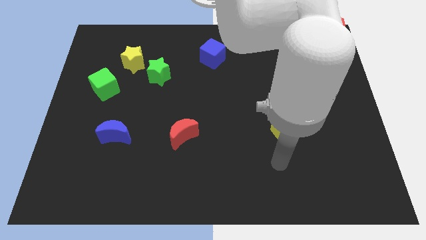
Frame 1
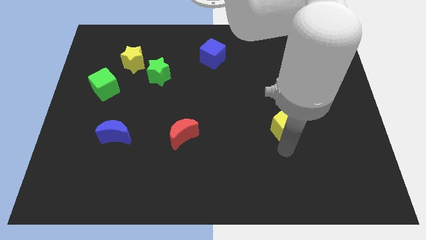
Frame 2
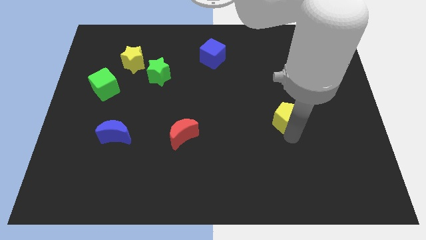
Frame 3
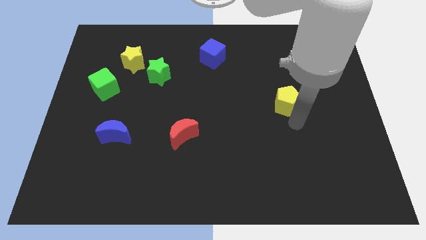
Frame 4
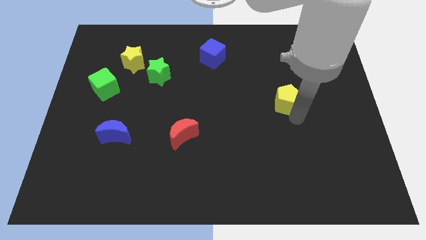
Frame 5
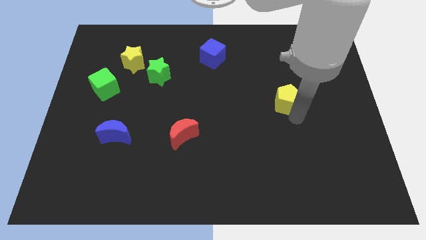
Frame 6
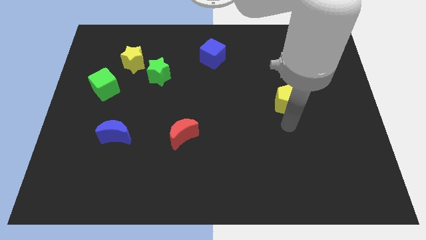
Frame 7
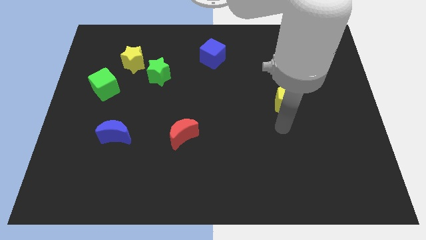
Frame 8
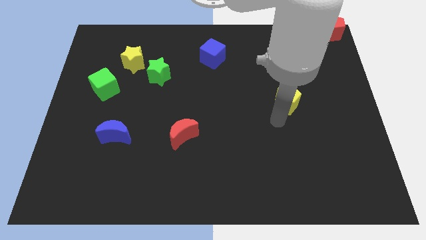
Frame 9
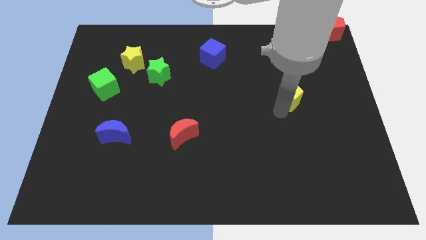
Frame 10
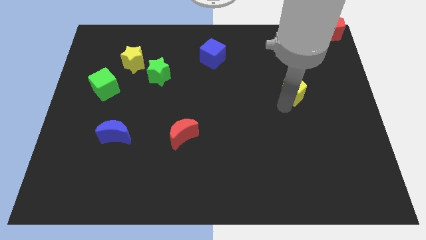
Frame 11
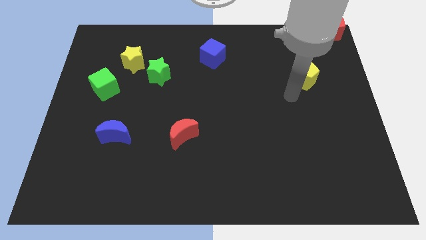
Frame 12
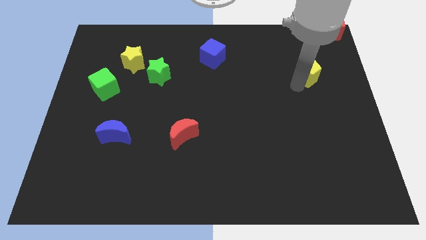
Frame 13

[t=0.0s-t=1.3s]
push the yellow pentagon to the top of the board

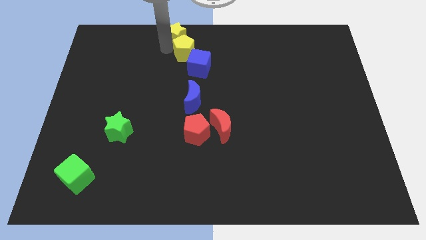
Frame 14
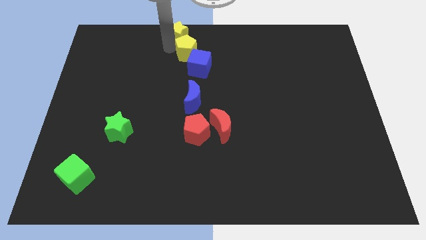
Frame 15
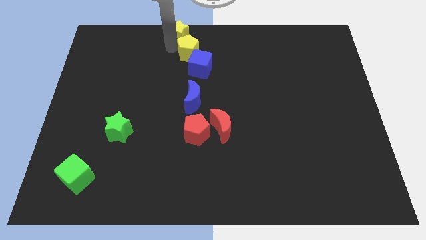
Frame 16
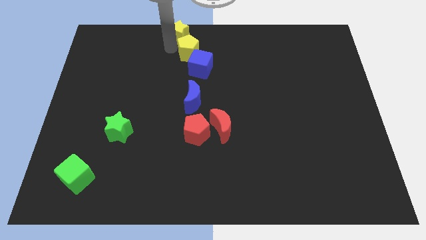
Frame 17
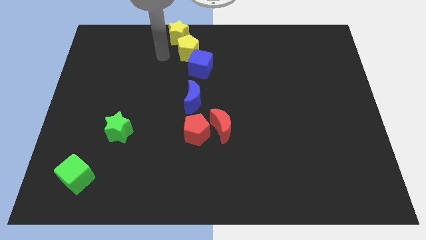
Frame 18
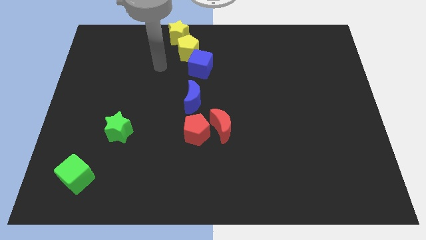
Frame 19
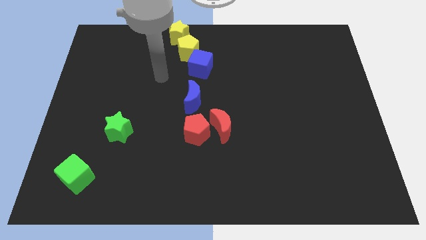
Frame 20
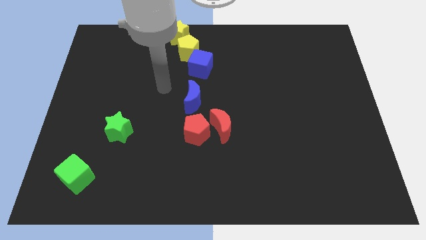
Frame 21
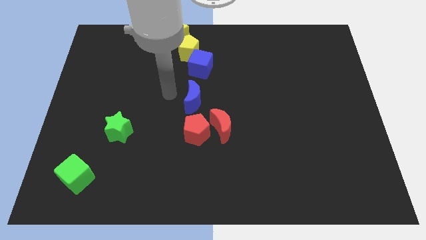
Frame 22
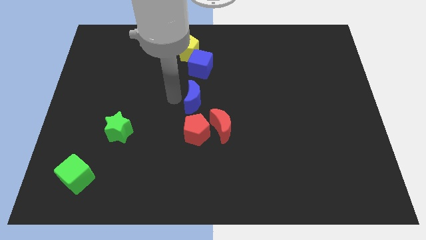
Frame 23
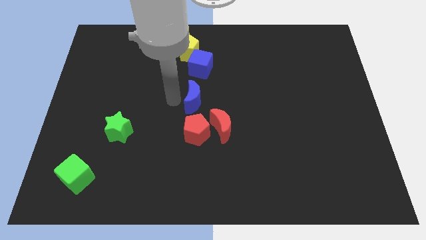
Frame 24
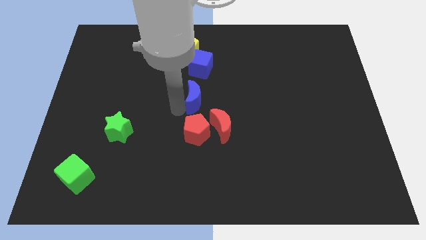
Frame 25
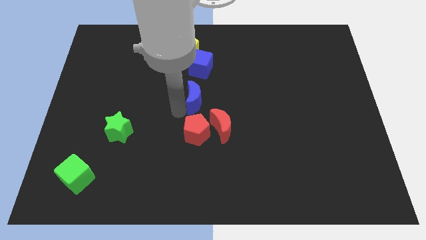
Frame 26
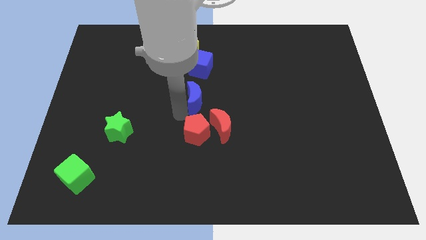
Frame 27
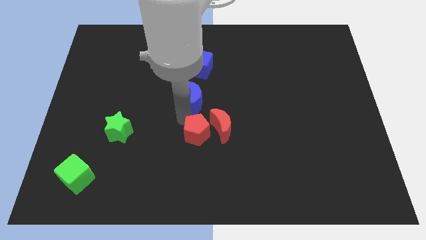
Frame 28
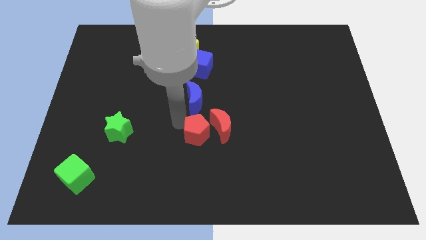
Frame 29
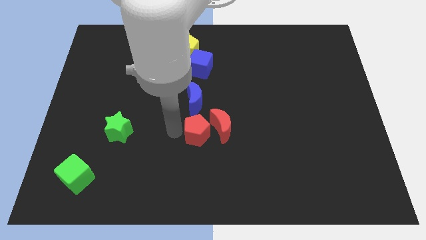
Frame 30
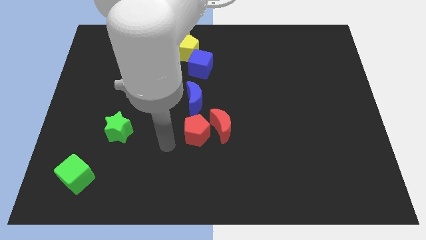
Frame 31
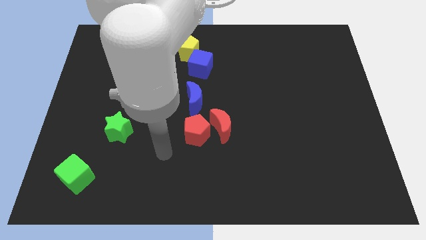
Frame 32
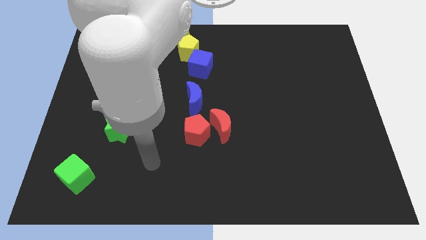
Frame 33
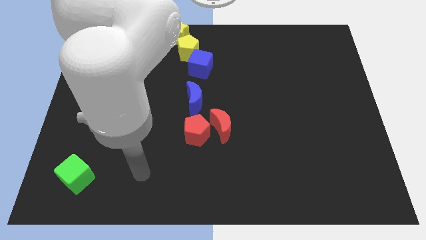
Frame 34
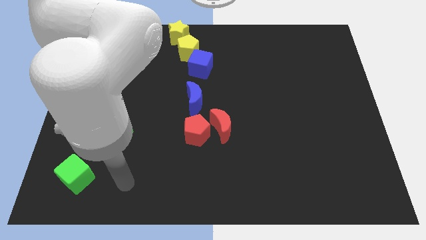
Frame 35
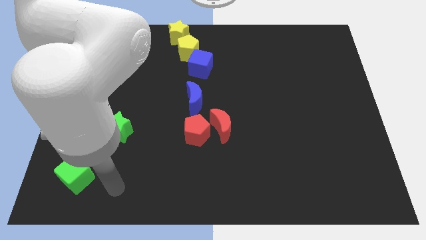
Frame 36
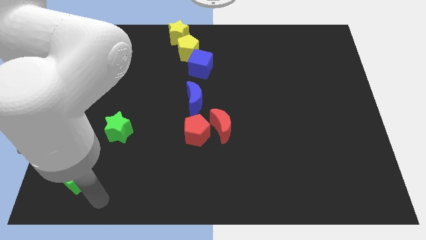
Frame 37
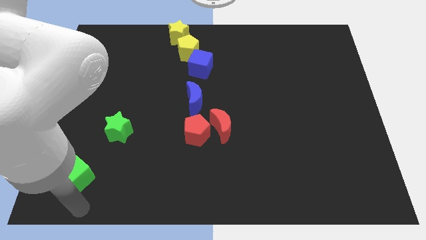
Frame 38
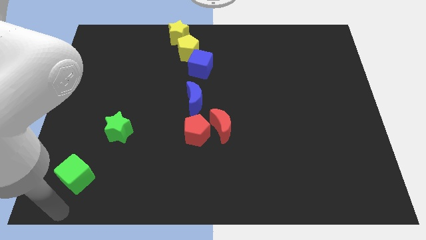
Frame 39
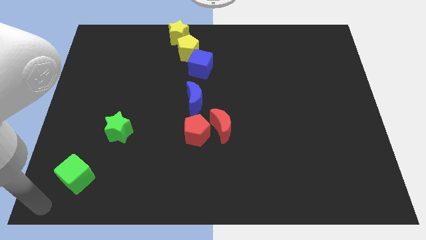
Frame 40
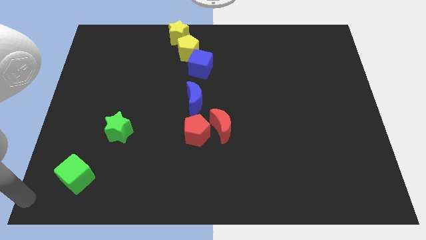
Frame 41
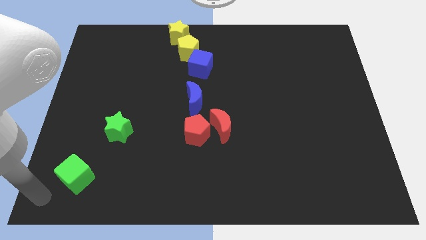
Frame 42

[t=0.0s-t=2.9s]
move your hand to the bottom left

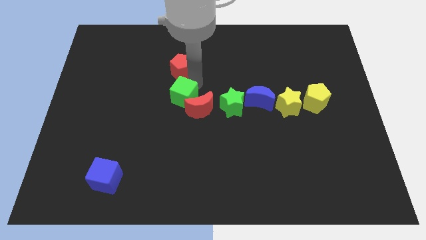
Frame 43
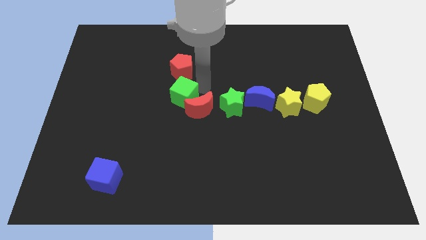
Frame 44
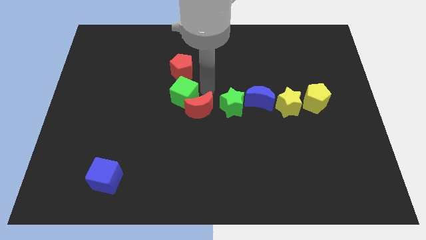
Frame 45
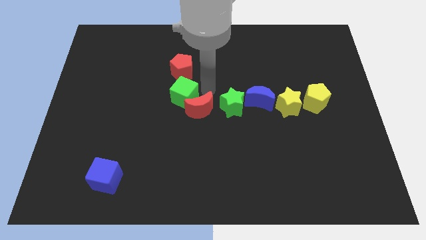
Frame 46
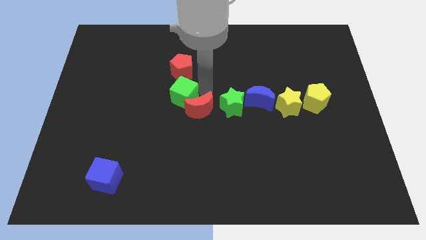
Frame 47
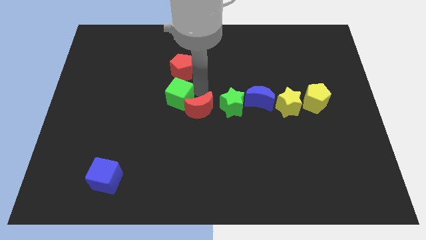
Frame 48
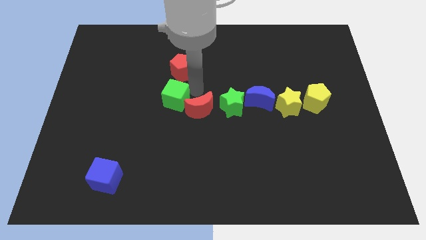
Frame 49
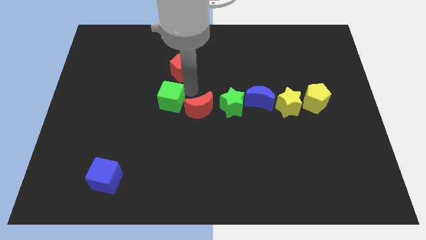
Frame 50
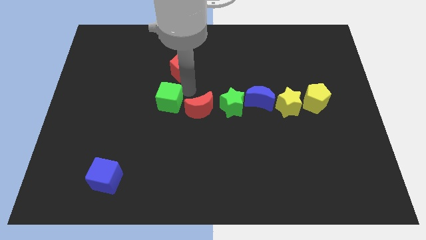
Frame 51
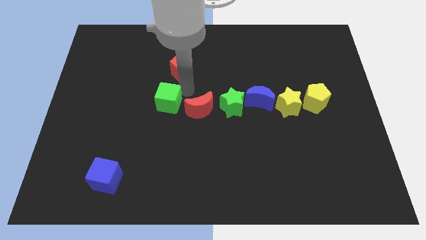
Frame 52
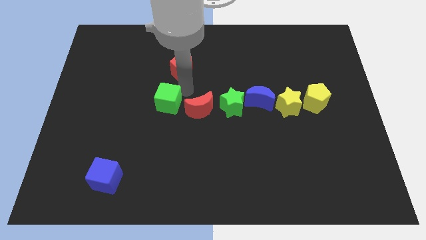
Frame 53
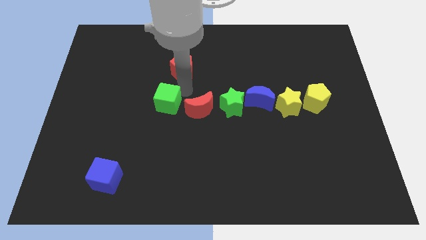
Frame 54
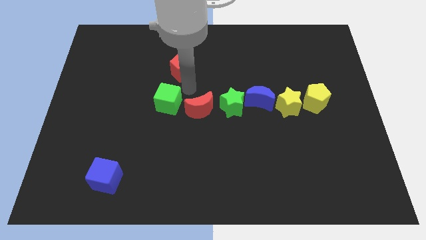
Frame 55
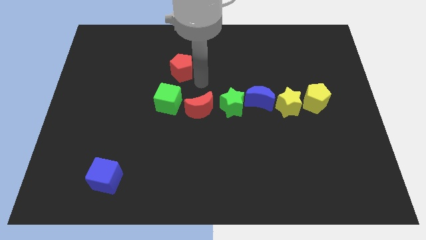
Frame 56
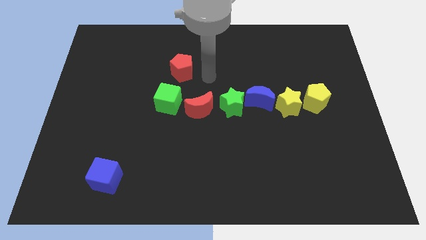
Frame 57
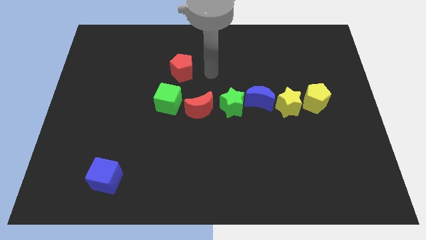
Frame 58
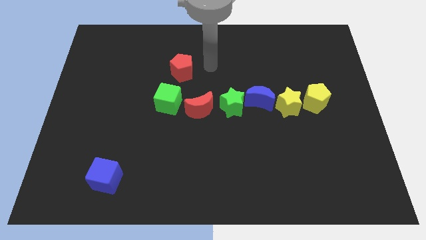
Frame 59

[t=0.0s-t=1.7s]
separate the green cube from the red blocks

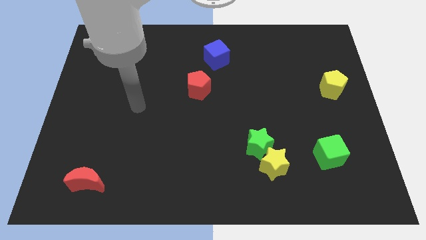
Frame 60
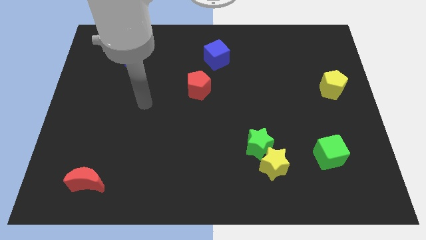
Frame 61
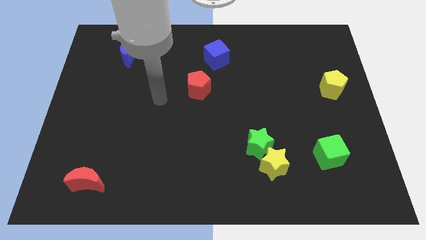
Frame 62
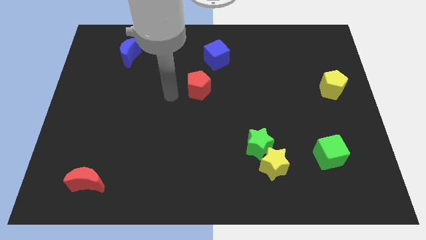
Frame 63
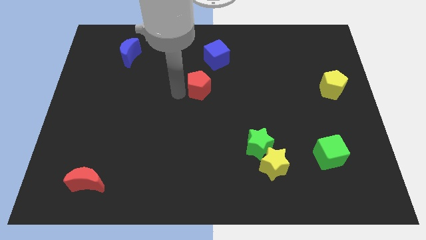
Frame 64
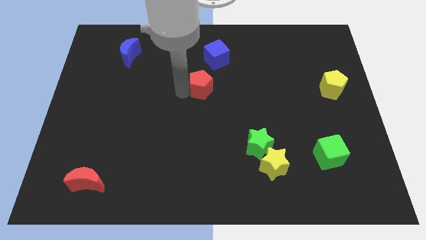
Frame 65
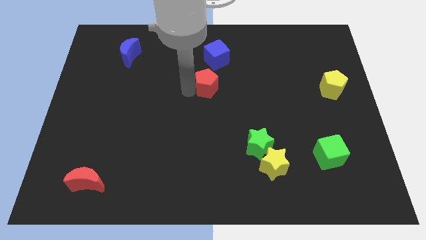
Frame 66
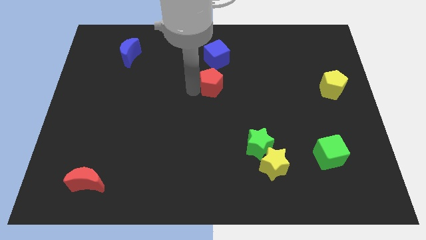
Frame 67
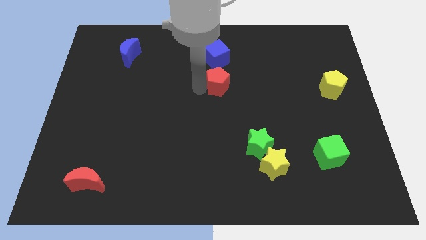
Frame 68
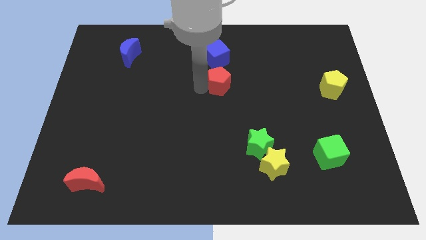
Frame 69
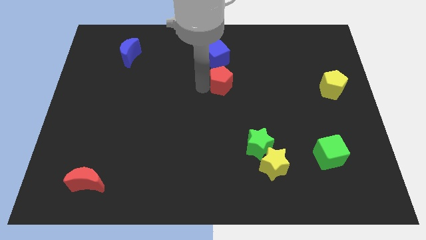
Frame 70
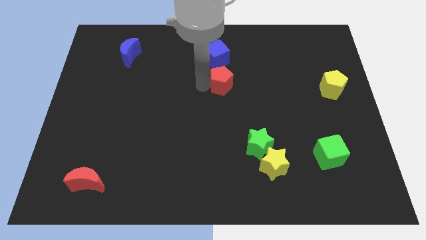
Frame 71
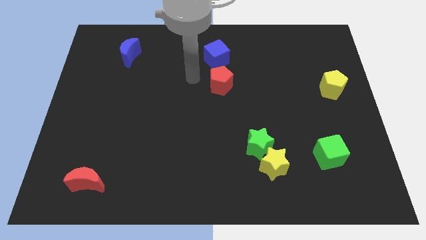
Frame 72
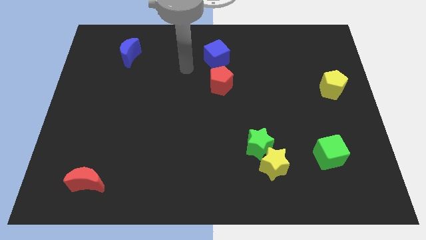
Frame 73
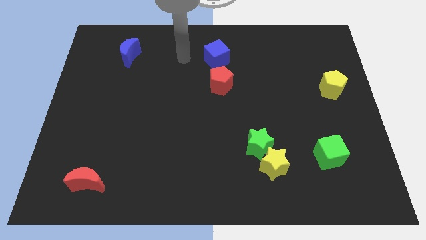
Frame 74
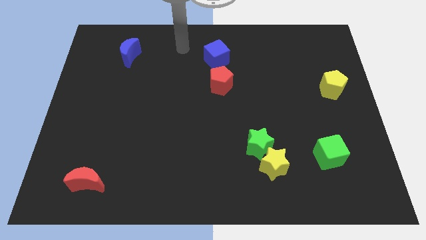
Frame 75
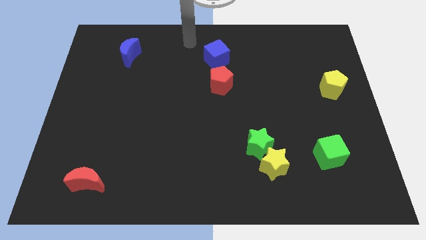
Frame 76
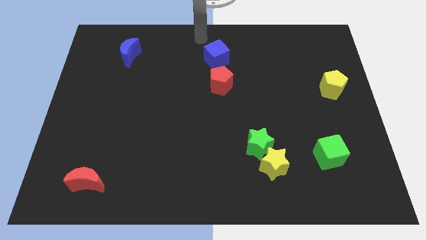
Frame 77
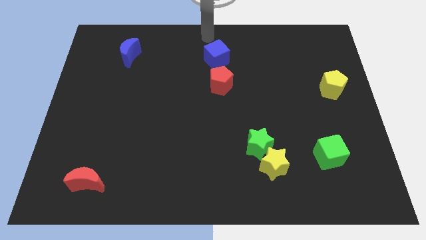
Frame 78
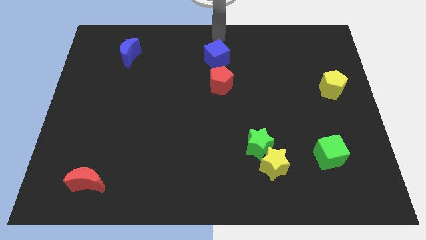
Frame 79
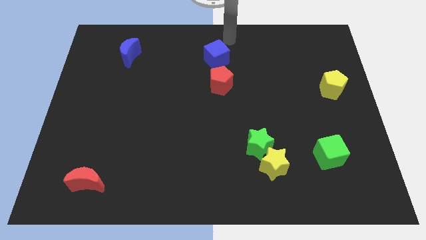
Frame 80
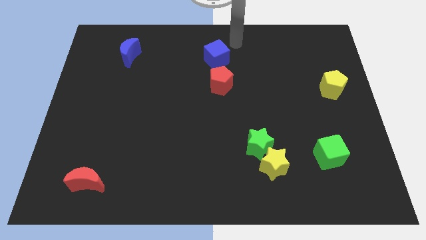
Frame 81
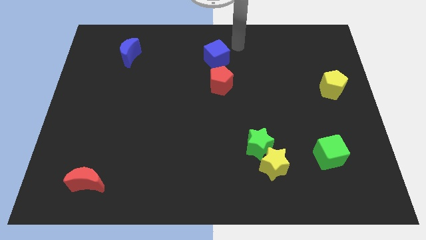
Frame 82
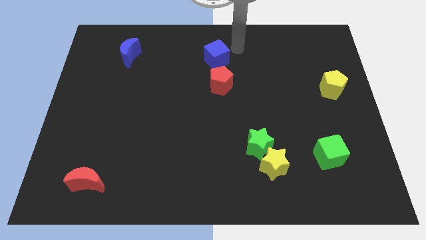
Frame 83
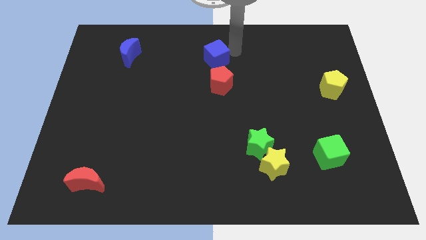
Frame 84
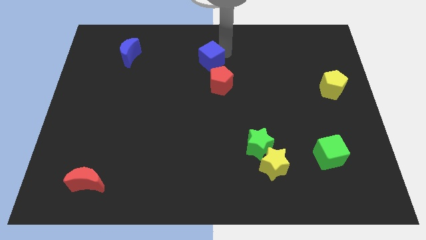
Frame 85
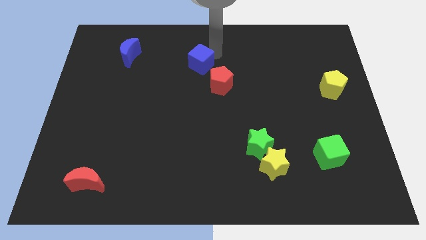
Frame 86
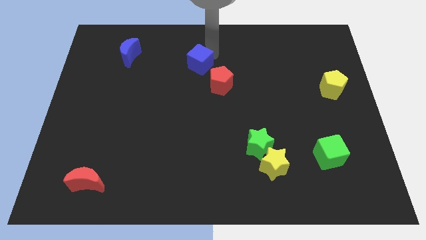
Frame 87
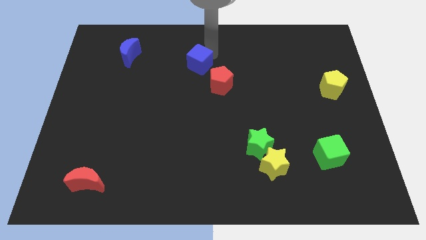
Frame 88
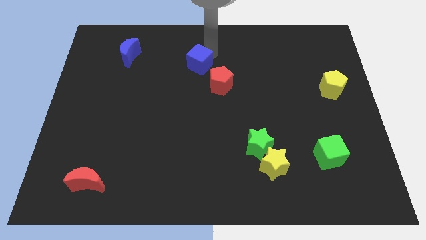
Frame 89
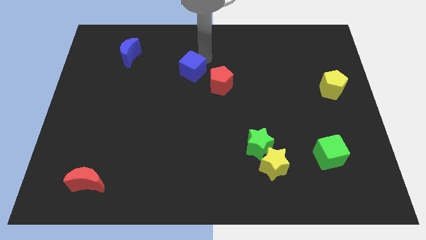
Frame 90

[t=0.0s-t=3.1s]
slide the blue cube diagonally to the red pentagon

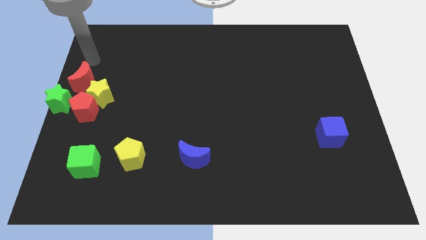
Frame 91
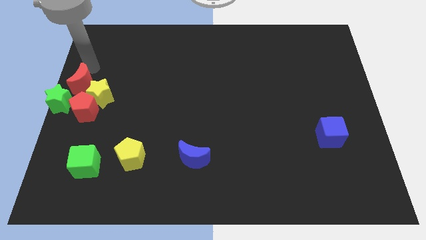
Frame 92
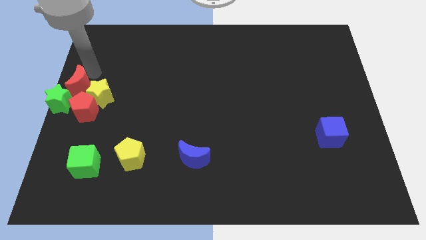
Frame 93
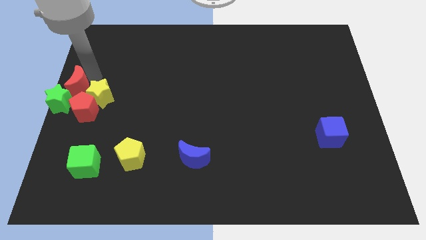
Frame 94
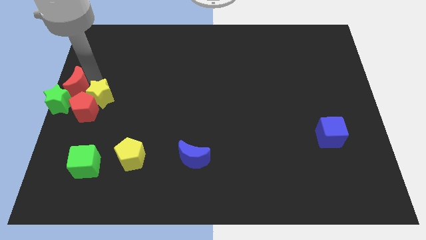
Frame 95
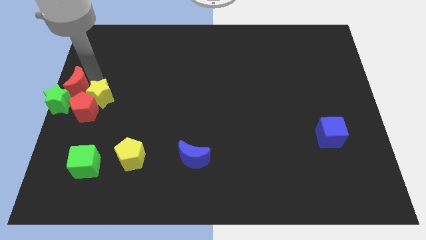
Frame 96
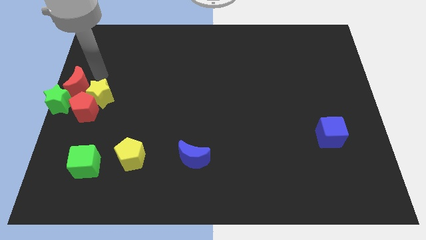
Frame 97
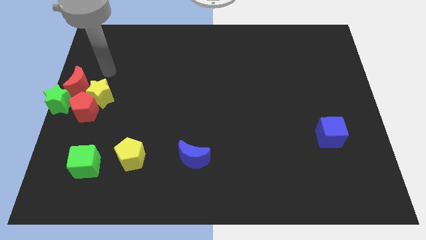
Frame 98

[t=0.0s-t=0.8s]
push the red crescent into the green star
